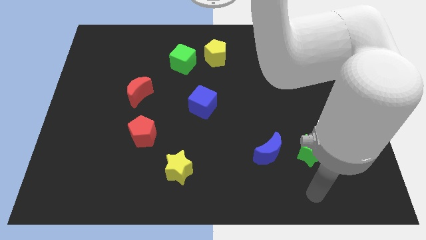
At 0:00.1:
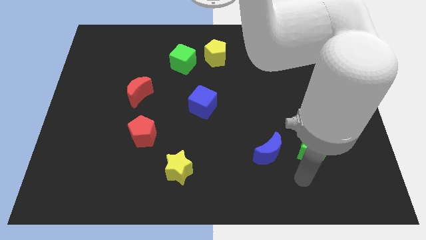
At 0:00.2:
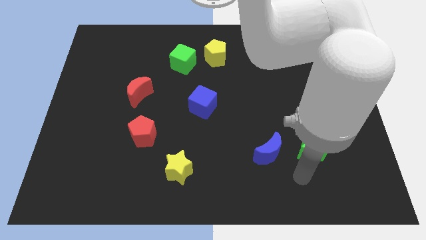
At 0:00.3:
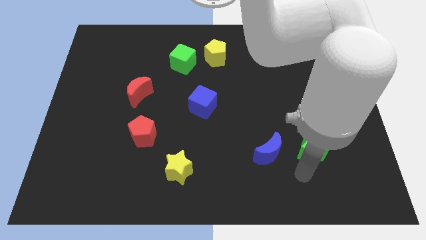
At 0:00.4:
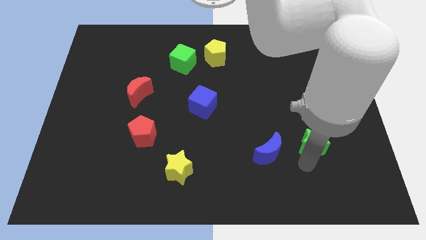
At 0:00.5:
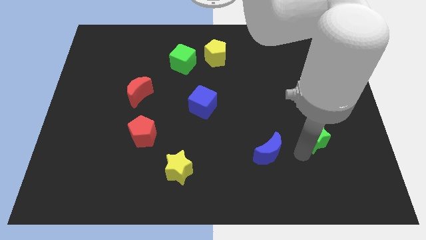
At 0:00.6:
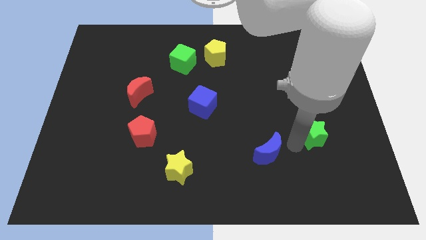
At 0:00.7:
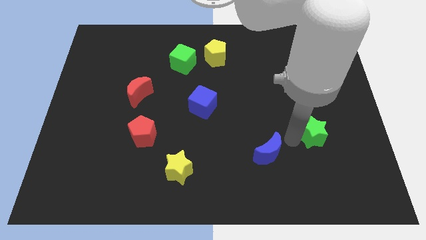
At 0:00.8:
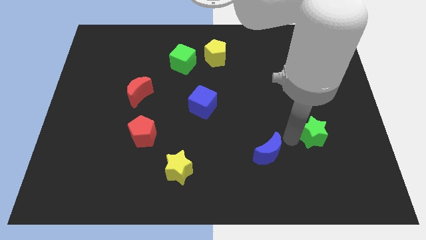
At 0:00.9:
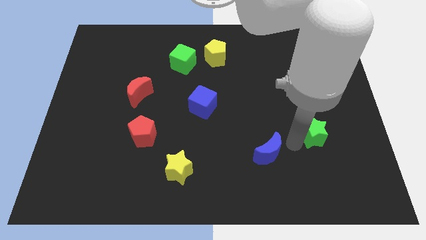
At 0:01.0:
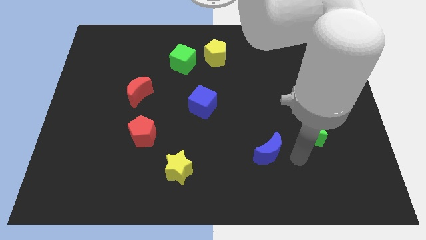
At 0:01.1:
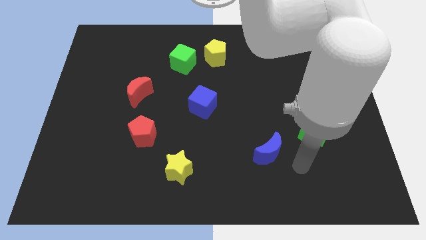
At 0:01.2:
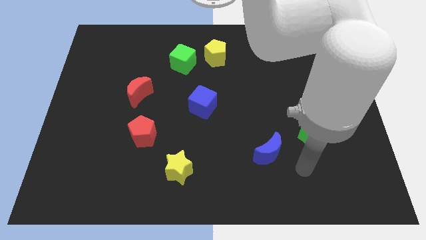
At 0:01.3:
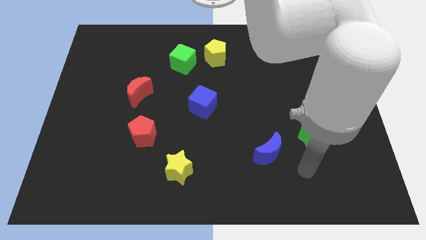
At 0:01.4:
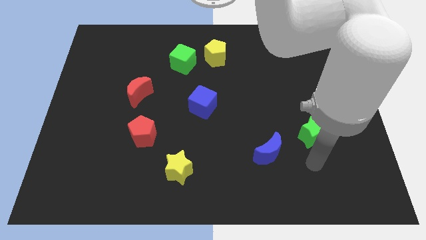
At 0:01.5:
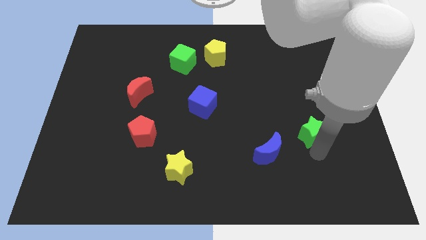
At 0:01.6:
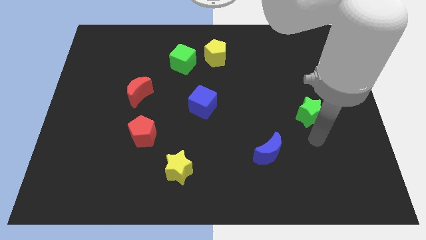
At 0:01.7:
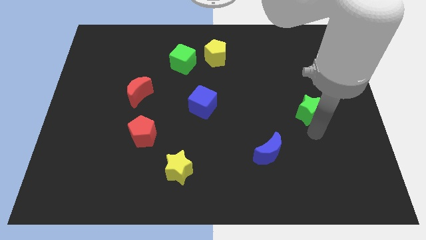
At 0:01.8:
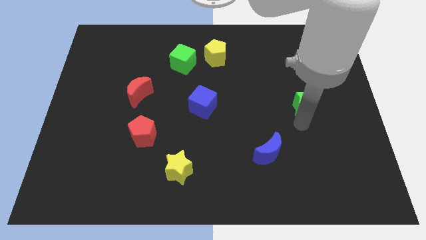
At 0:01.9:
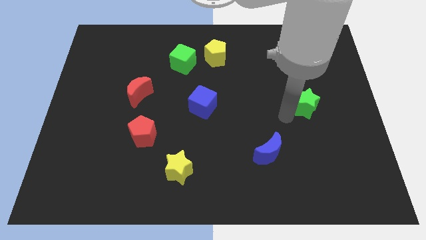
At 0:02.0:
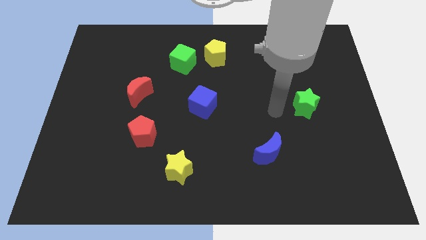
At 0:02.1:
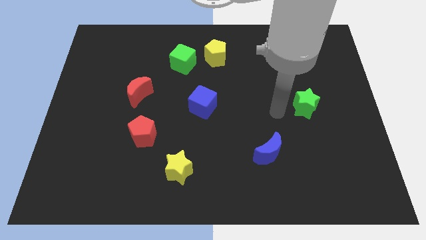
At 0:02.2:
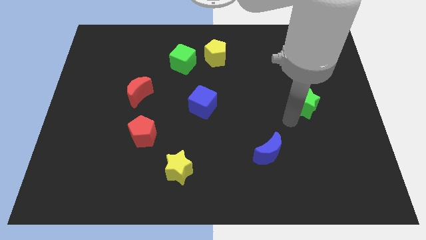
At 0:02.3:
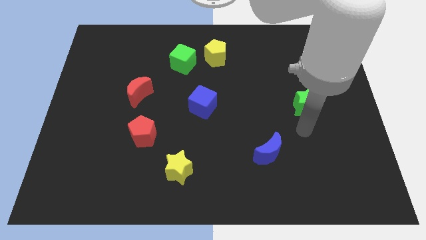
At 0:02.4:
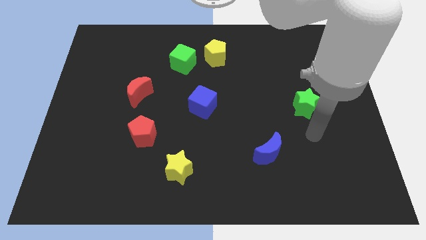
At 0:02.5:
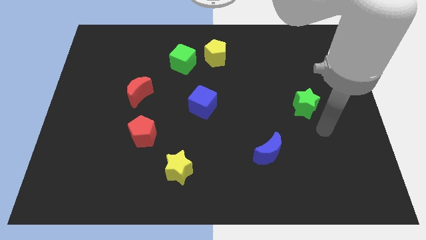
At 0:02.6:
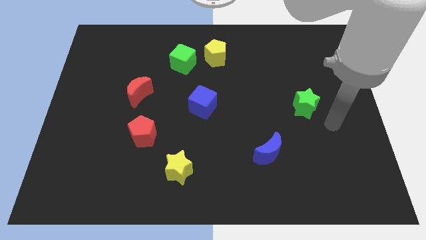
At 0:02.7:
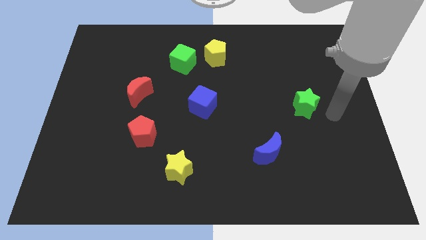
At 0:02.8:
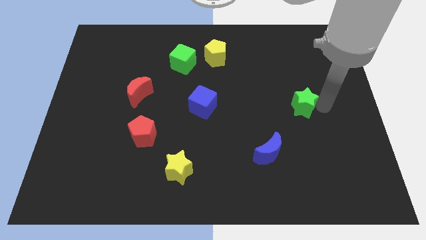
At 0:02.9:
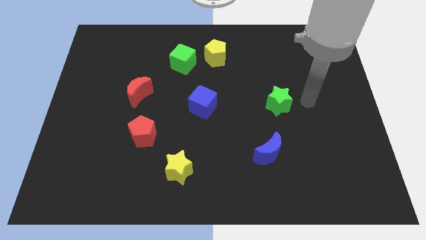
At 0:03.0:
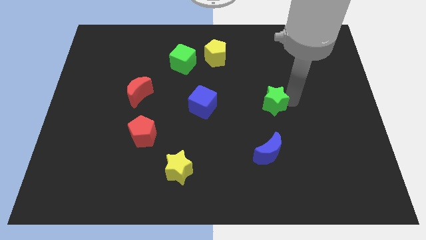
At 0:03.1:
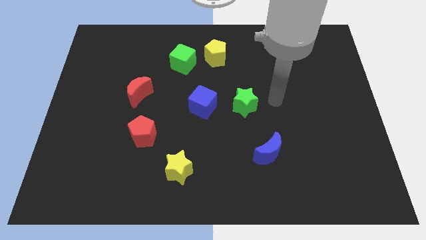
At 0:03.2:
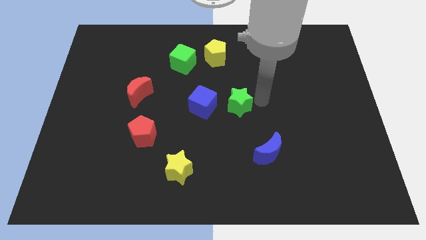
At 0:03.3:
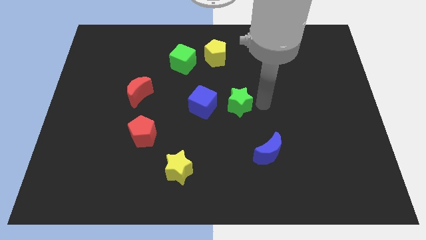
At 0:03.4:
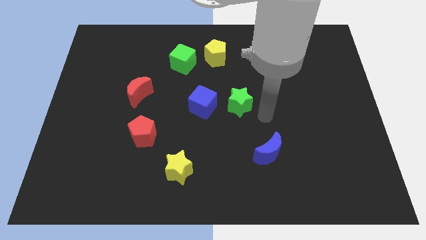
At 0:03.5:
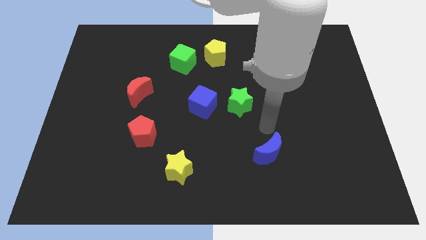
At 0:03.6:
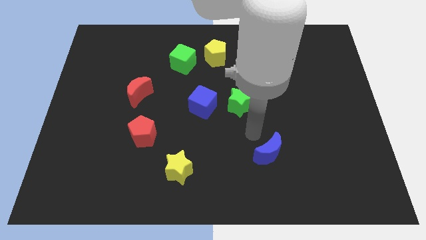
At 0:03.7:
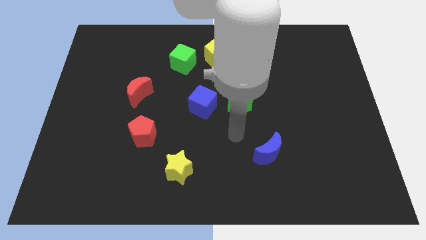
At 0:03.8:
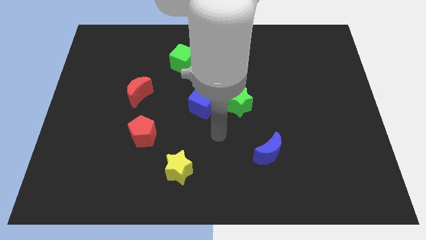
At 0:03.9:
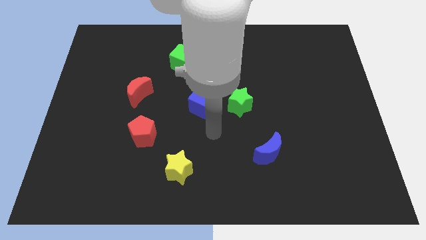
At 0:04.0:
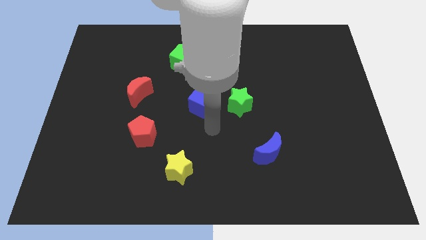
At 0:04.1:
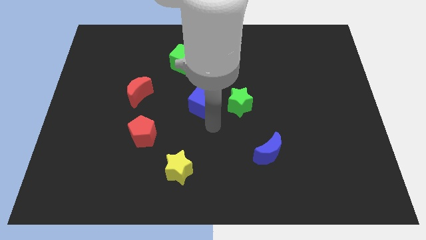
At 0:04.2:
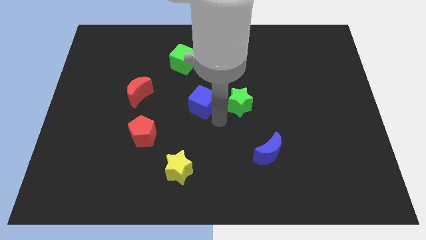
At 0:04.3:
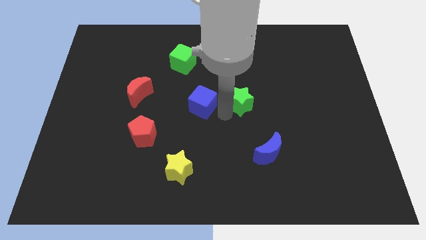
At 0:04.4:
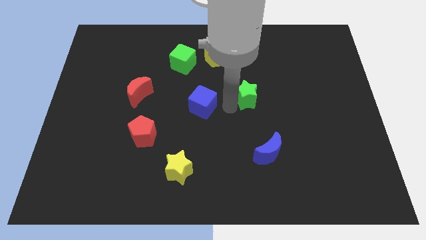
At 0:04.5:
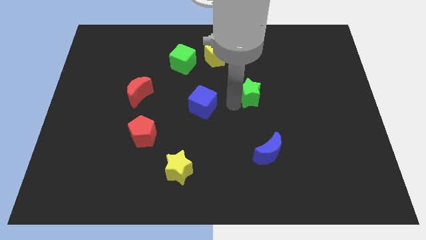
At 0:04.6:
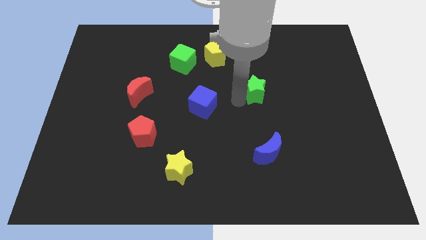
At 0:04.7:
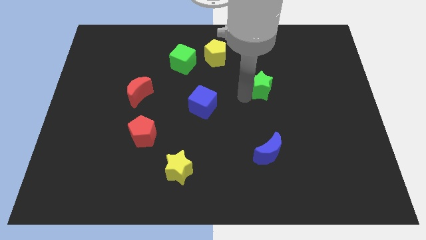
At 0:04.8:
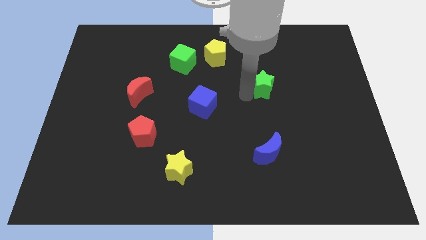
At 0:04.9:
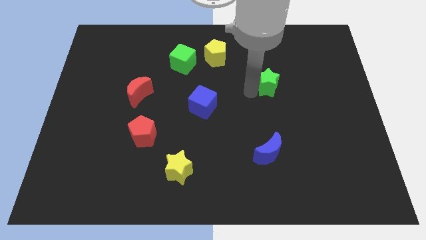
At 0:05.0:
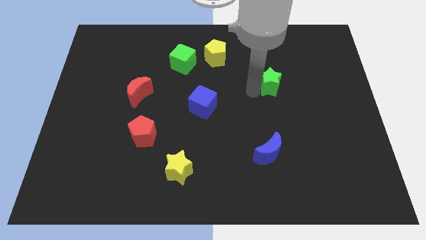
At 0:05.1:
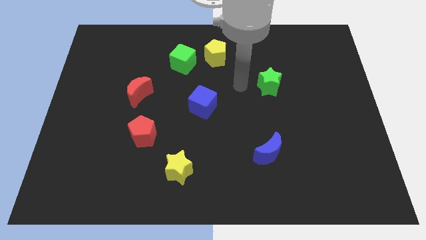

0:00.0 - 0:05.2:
push the green star parallel to the top of blue crescent

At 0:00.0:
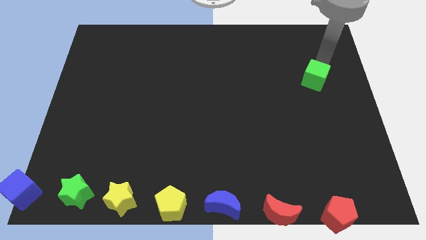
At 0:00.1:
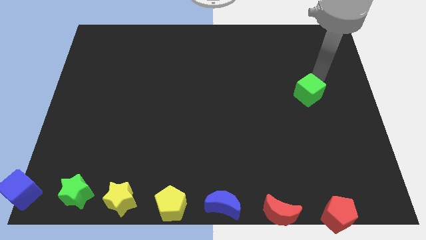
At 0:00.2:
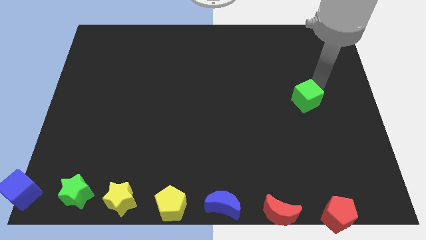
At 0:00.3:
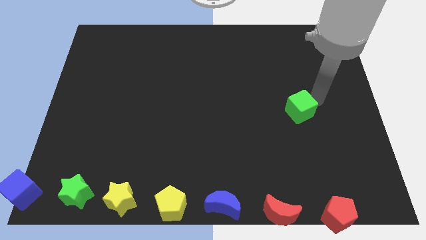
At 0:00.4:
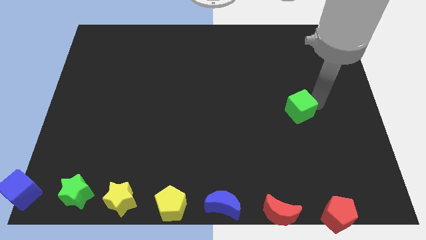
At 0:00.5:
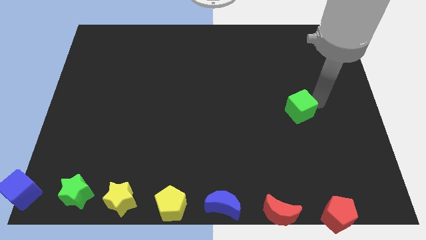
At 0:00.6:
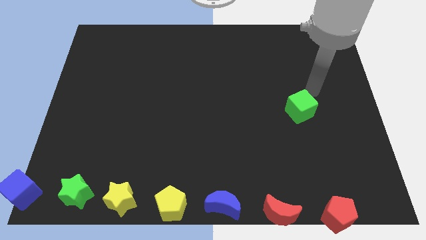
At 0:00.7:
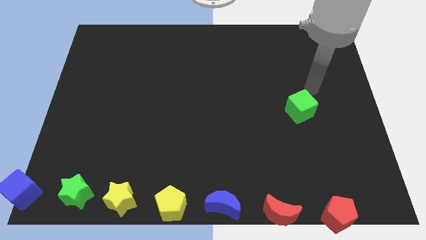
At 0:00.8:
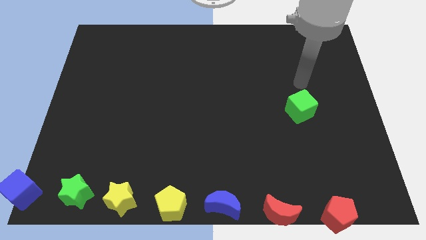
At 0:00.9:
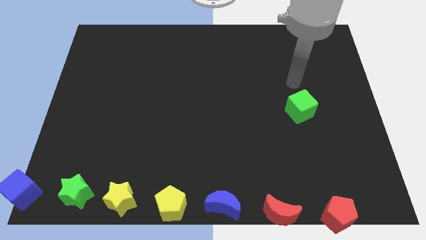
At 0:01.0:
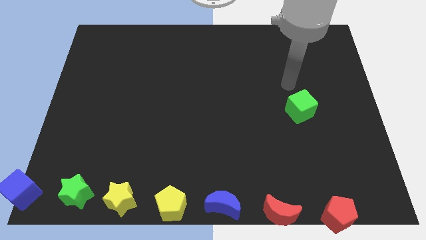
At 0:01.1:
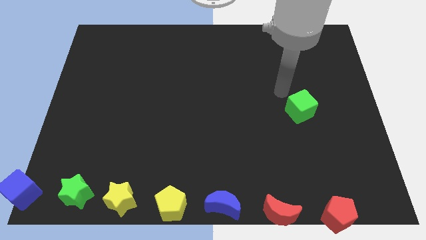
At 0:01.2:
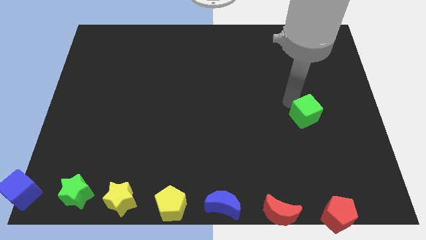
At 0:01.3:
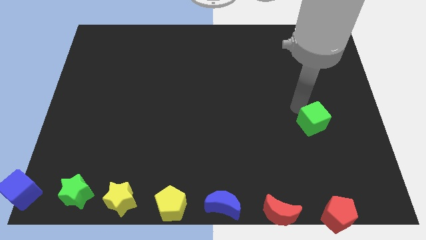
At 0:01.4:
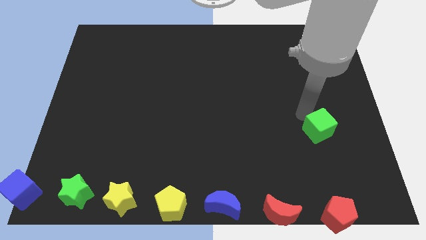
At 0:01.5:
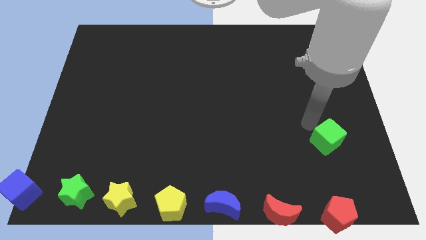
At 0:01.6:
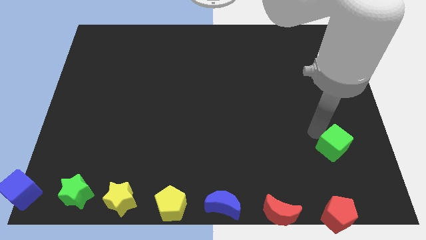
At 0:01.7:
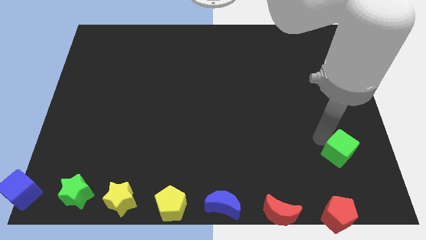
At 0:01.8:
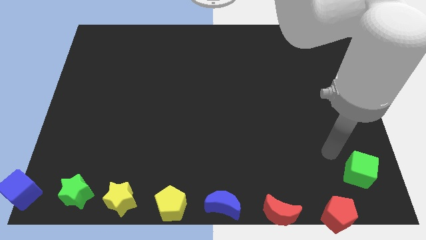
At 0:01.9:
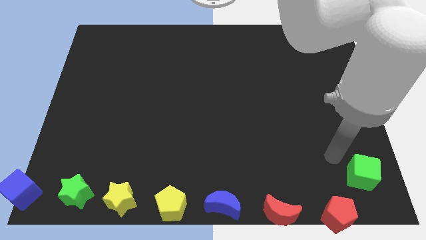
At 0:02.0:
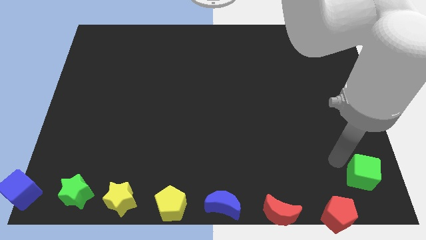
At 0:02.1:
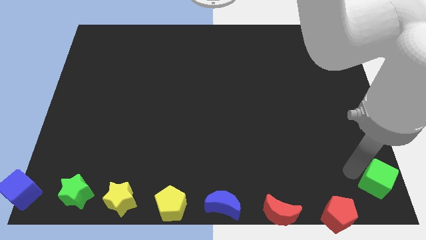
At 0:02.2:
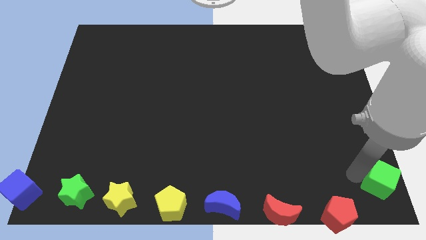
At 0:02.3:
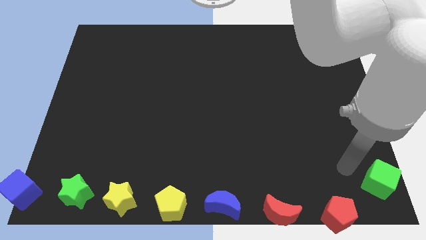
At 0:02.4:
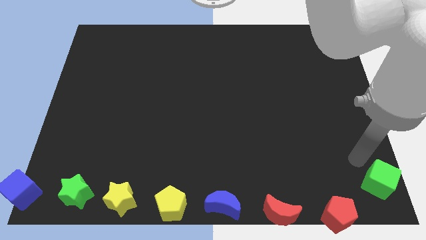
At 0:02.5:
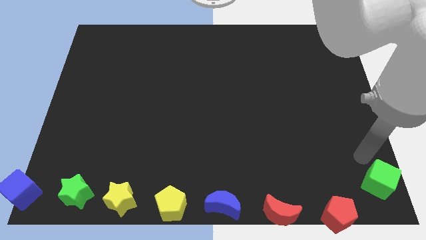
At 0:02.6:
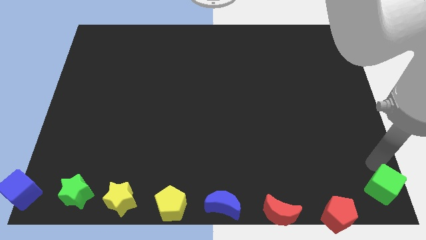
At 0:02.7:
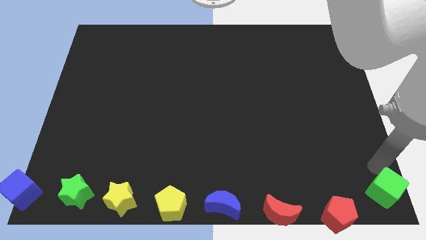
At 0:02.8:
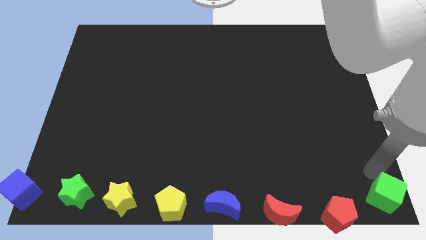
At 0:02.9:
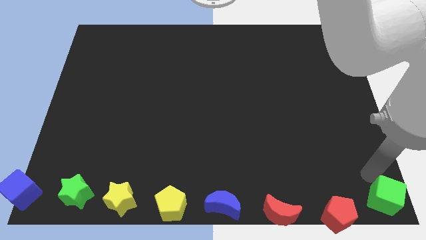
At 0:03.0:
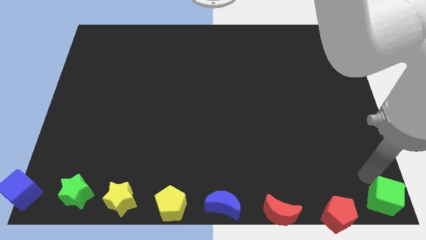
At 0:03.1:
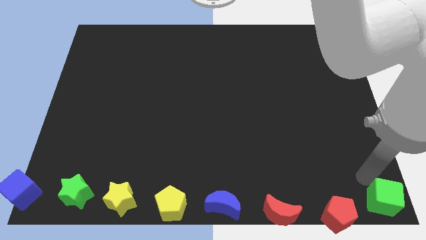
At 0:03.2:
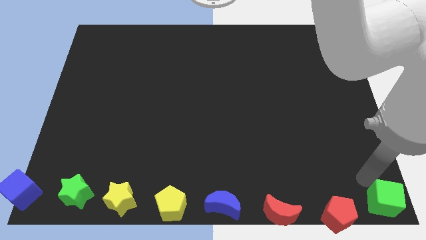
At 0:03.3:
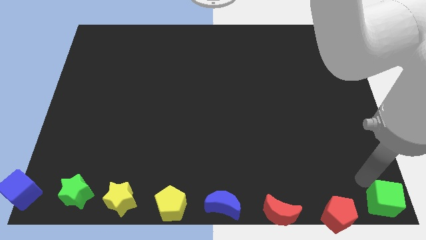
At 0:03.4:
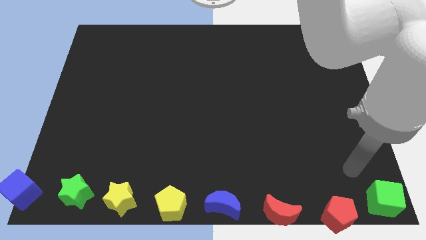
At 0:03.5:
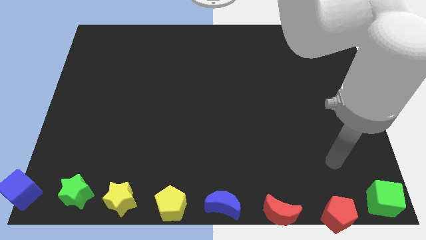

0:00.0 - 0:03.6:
move the green cube to the right side of the red pentagon

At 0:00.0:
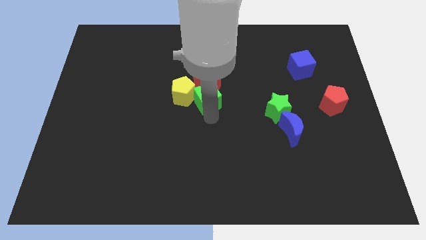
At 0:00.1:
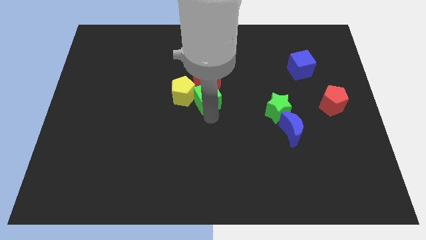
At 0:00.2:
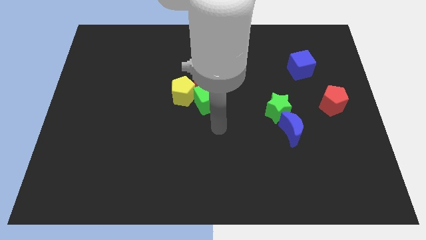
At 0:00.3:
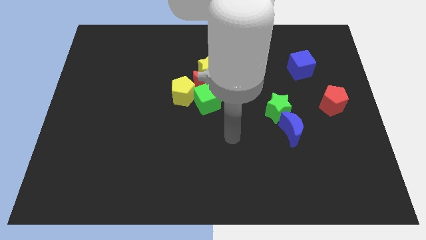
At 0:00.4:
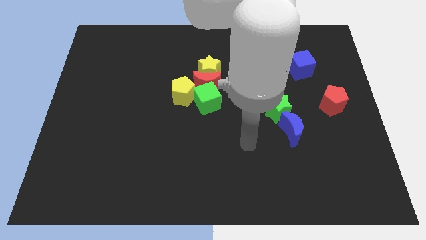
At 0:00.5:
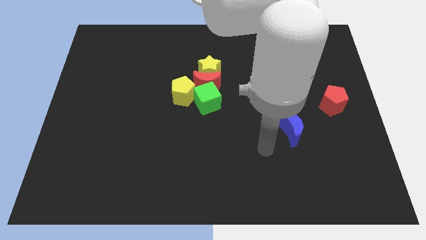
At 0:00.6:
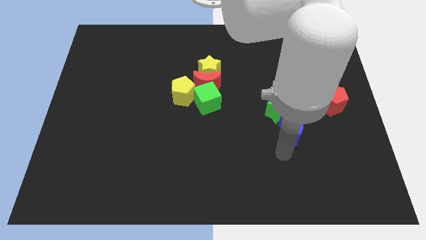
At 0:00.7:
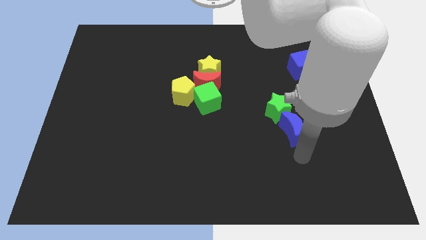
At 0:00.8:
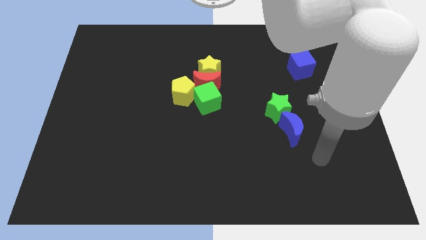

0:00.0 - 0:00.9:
move the arm away from the green cube
